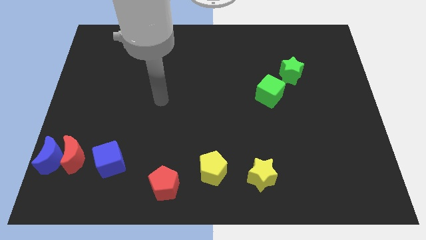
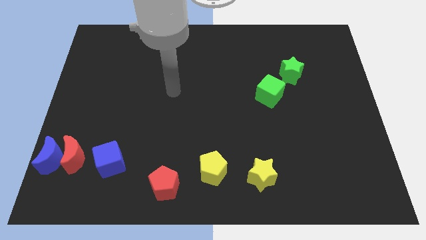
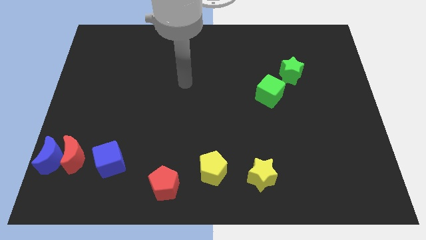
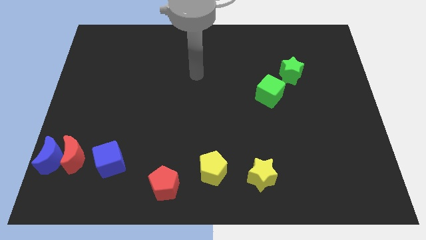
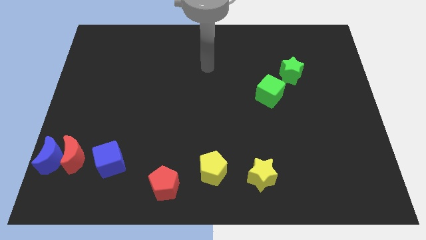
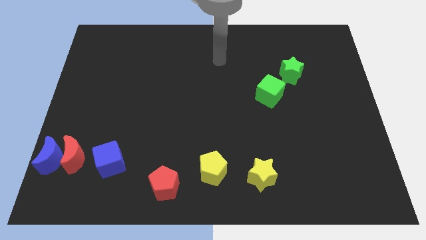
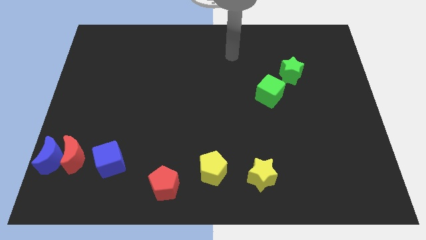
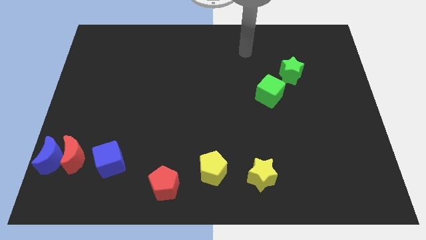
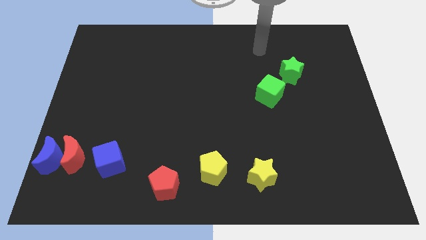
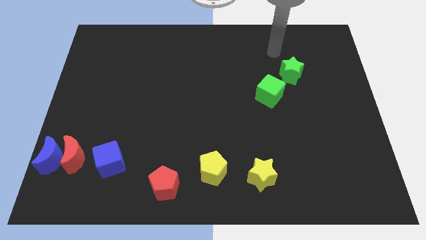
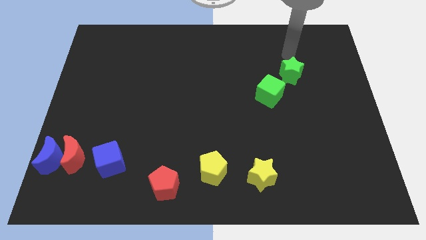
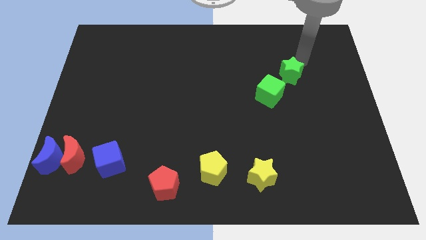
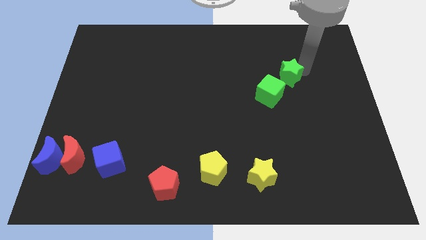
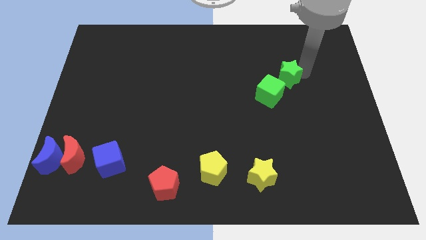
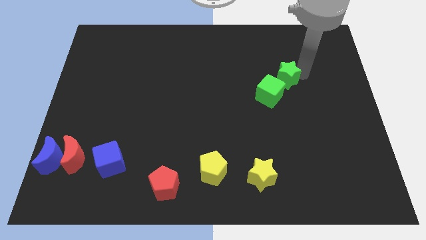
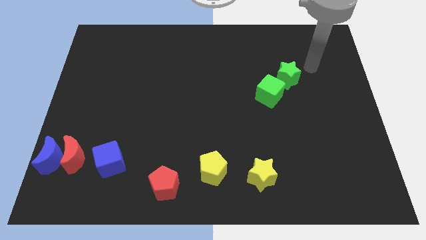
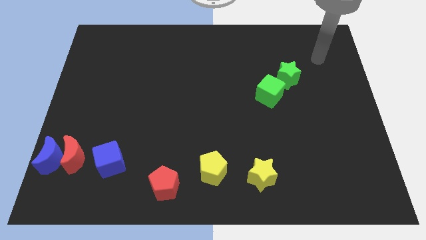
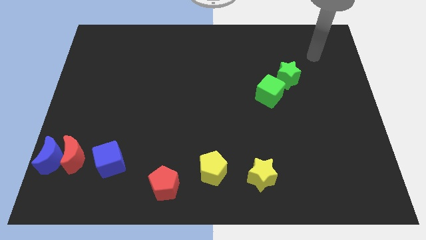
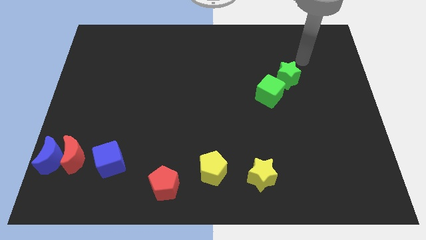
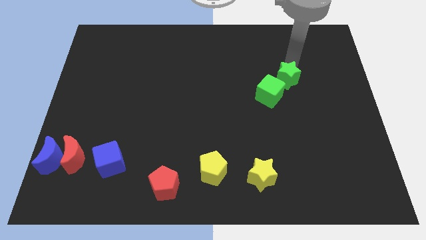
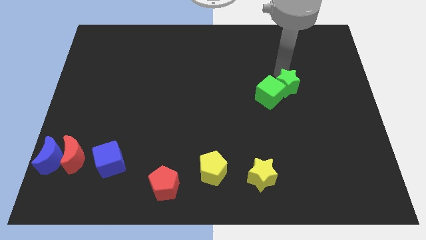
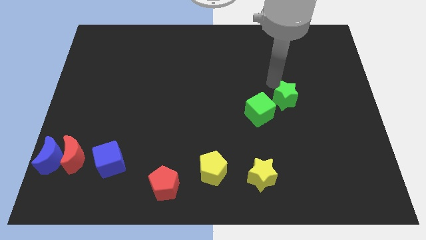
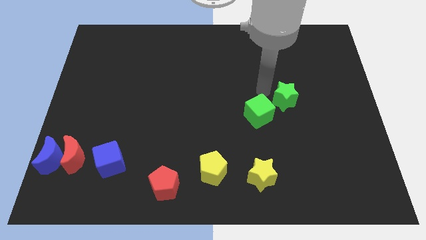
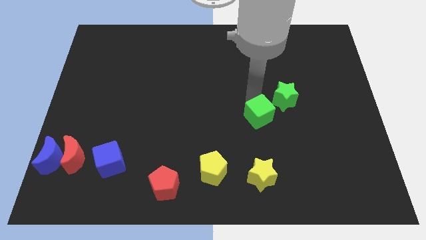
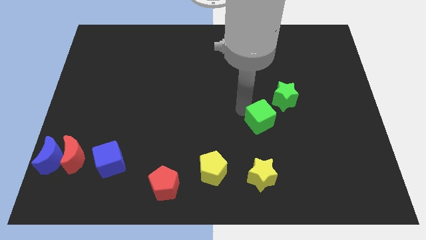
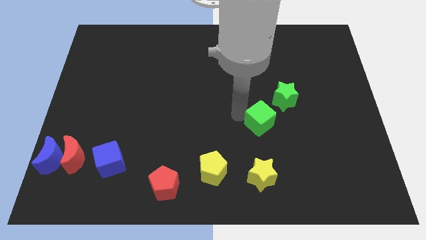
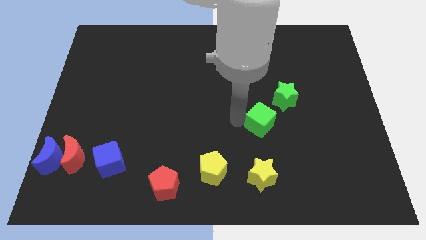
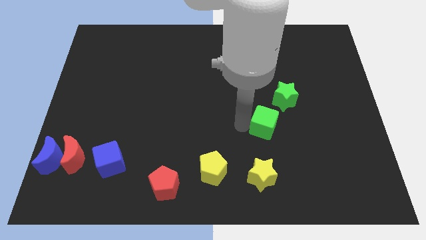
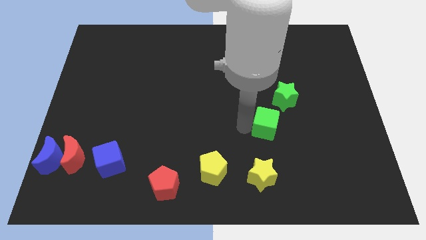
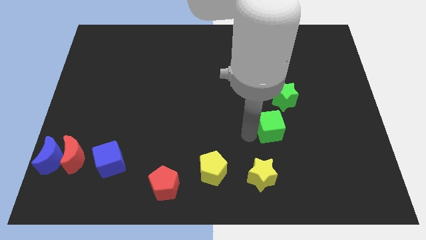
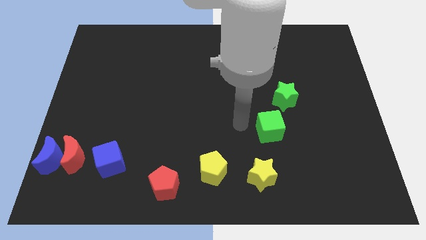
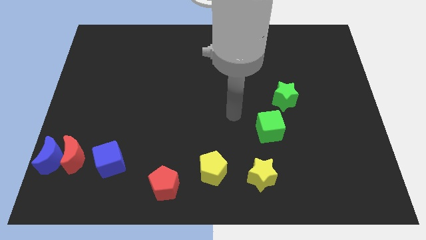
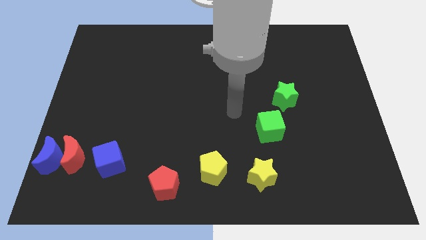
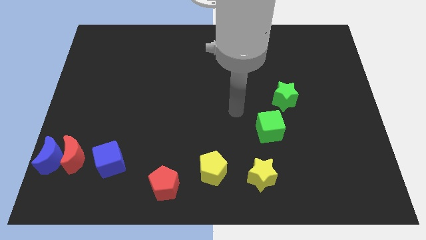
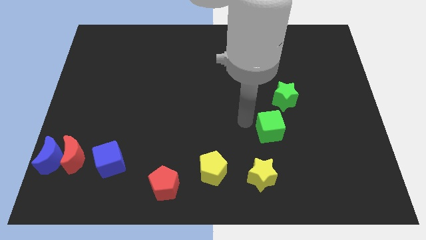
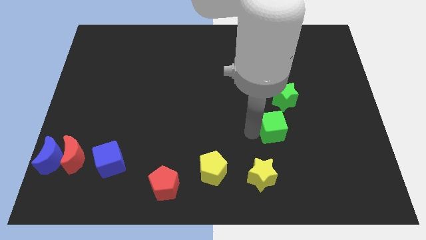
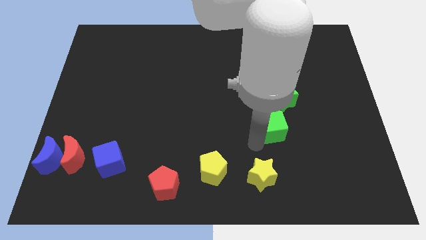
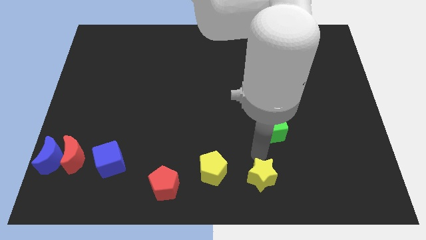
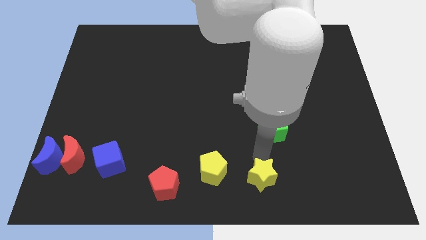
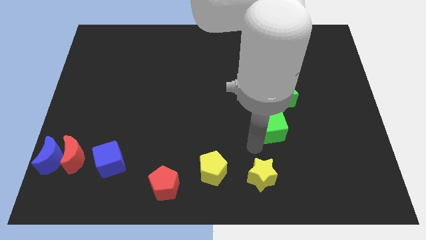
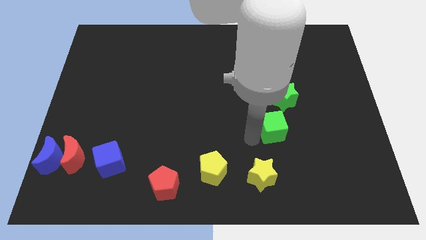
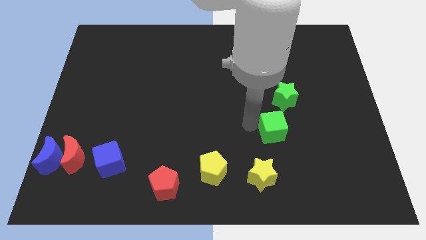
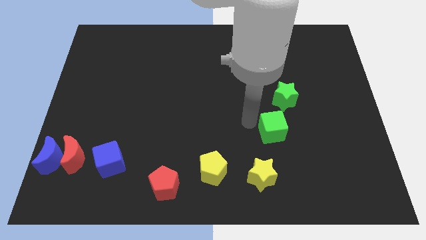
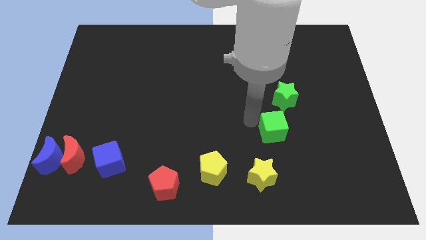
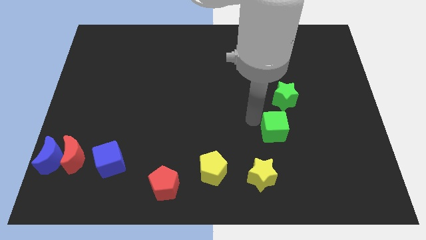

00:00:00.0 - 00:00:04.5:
place green cube in between green star and yellow star

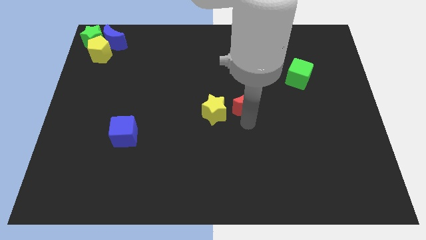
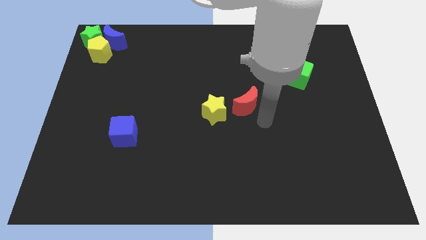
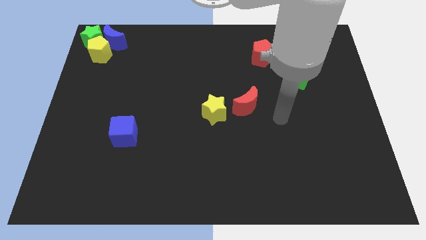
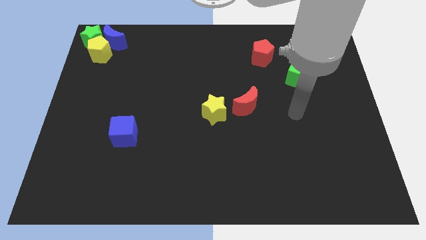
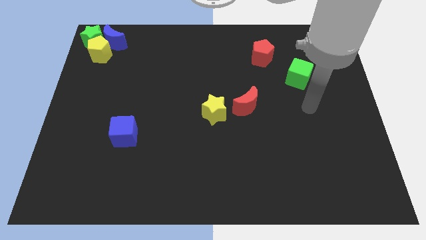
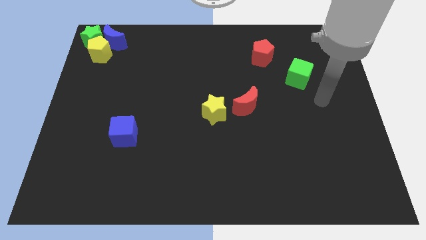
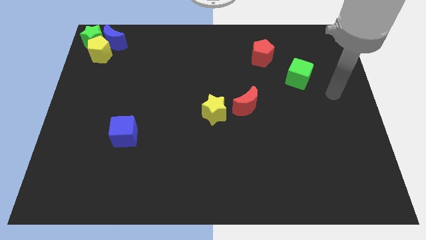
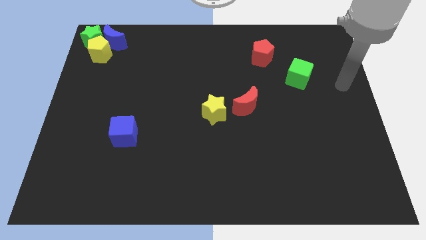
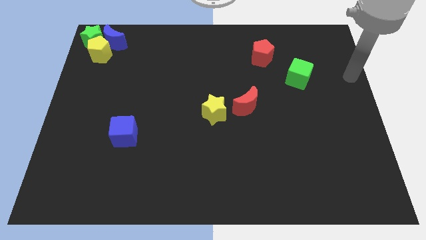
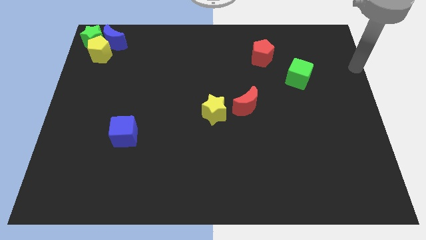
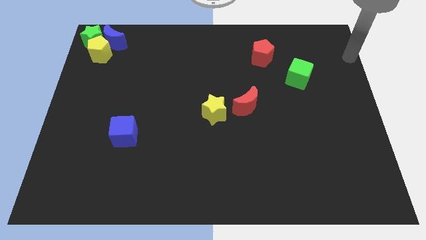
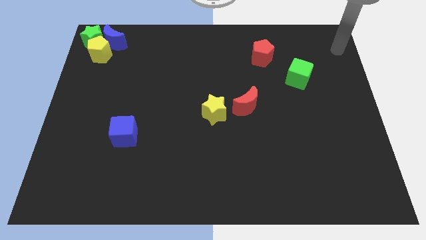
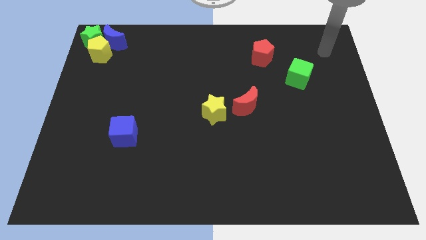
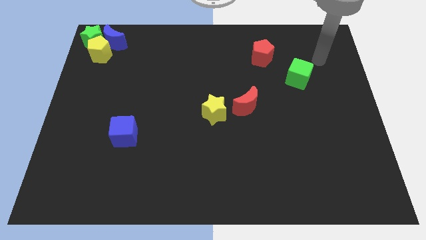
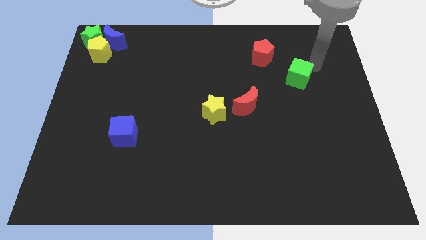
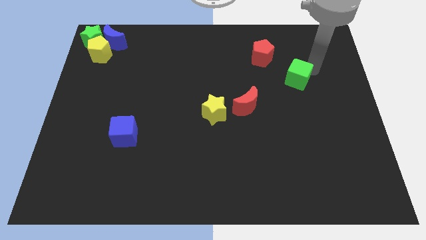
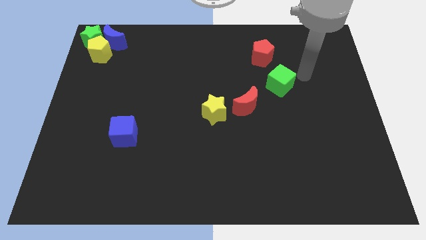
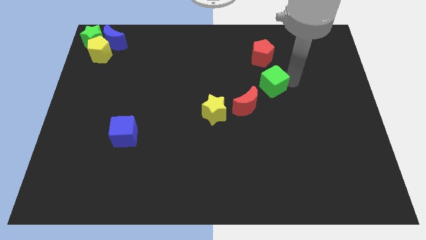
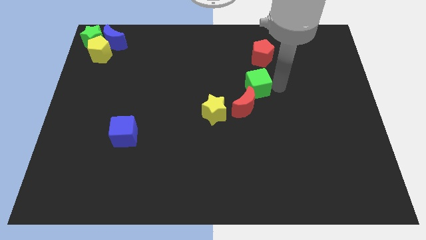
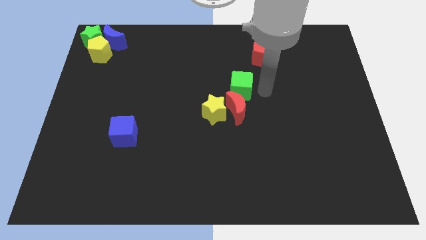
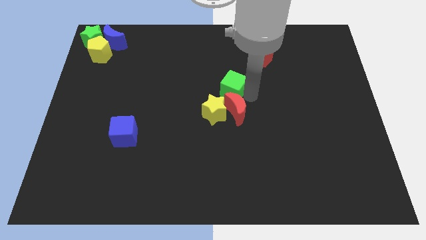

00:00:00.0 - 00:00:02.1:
place the green cube above the red crescent

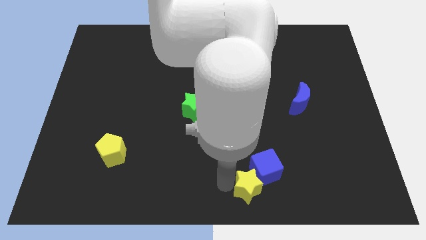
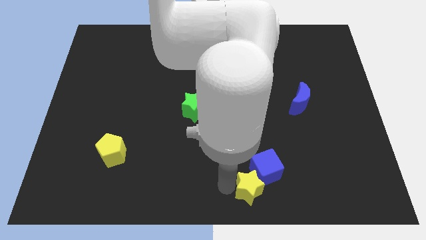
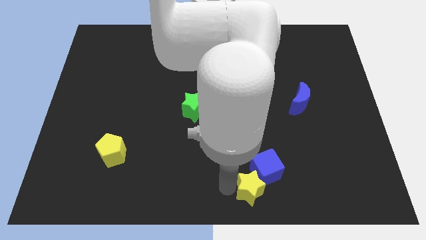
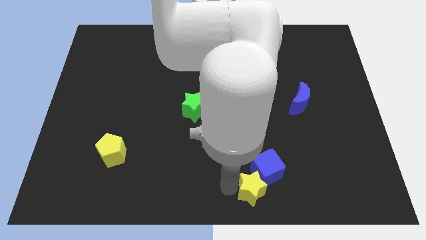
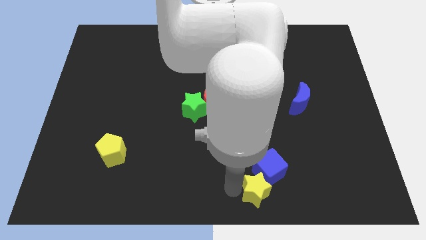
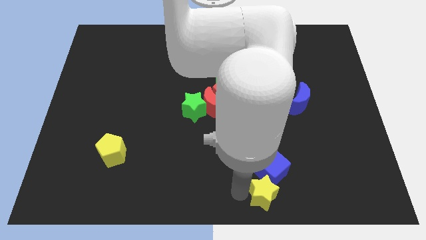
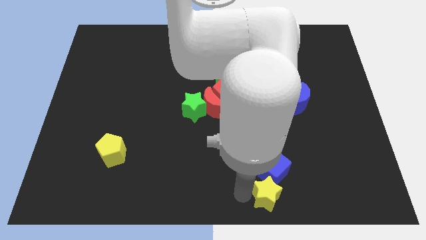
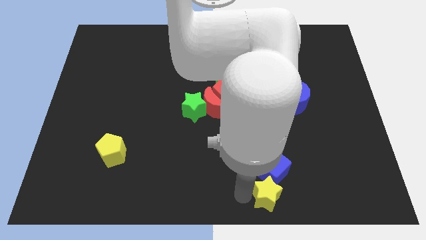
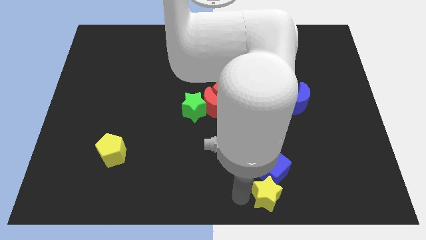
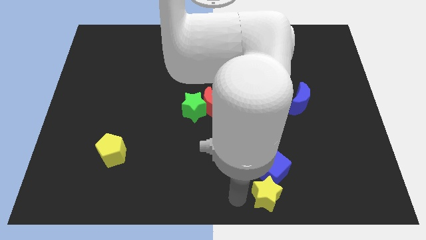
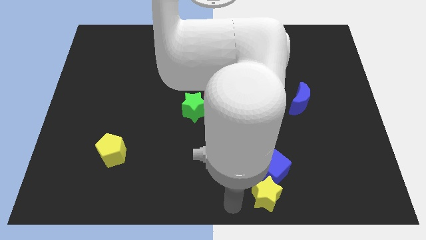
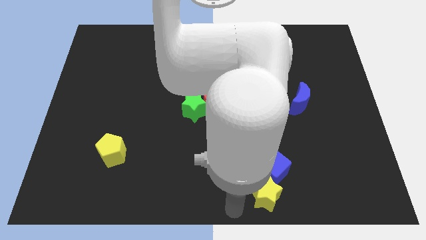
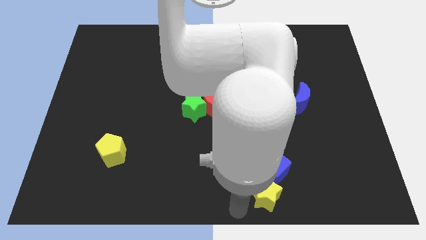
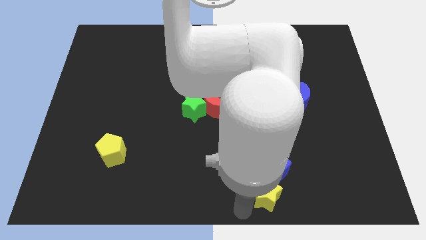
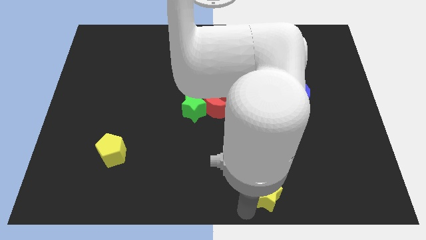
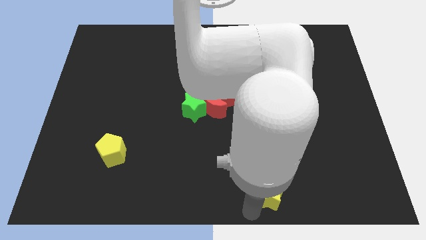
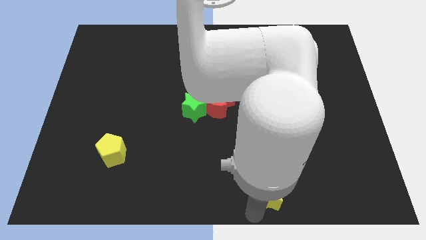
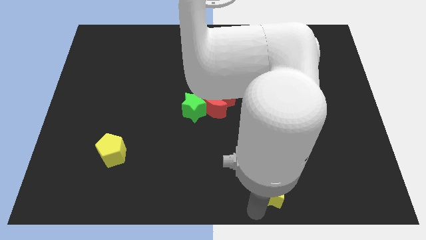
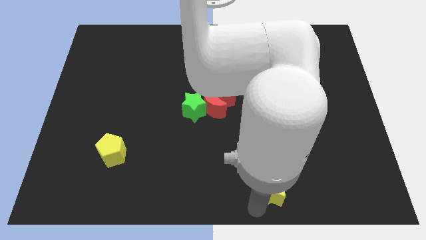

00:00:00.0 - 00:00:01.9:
place yellow star below blue cube

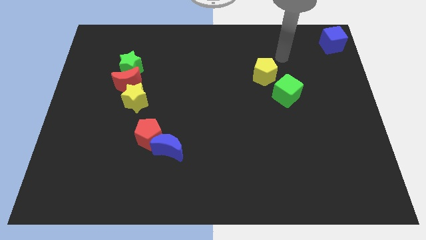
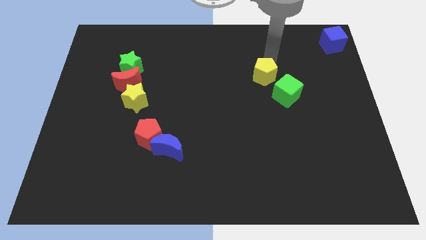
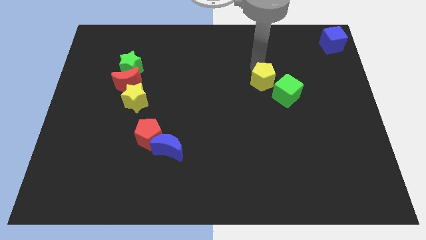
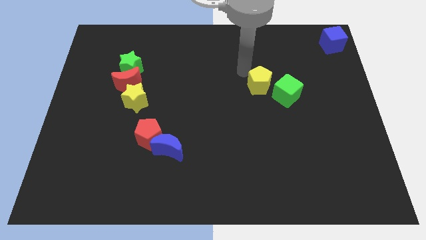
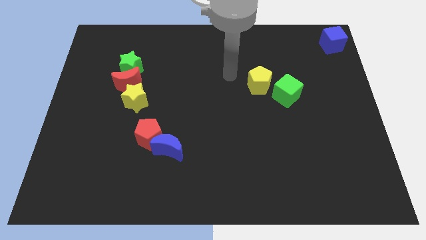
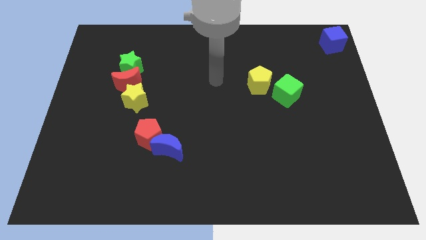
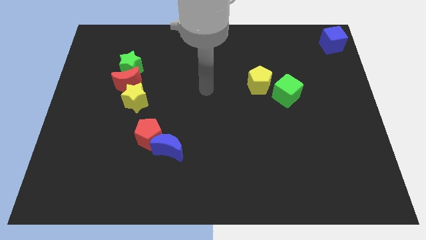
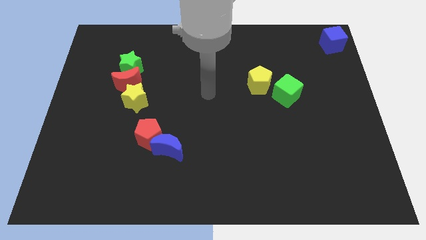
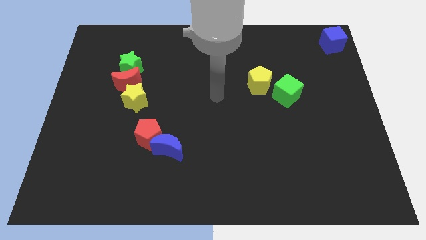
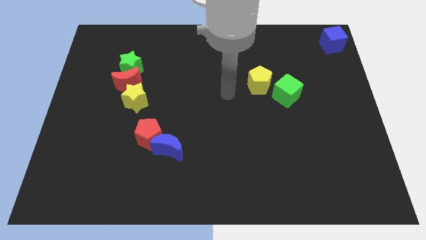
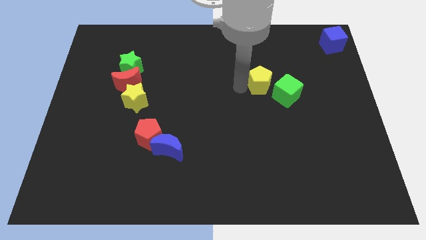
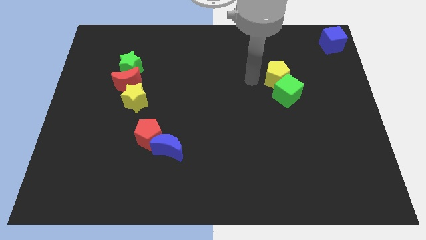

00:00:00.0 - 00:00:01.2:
place the yellow pentagon to the top of the green cube
